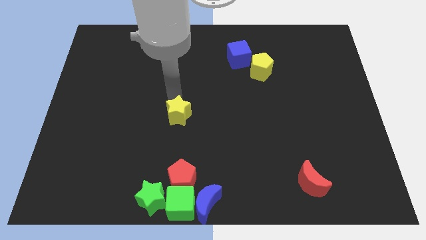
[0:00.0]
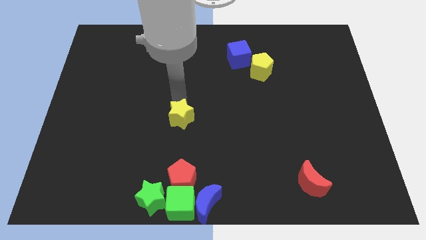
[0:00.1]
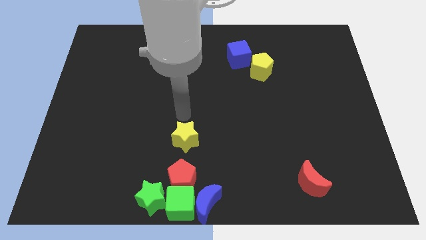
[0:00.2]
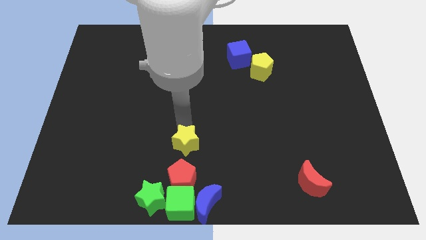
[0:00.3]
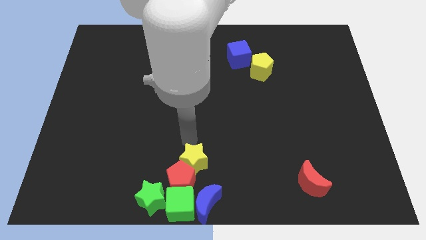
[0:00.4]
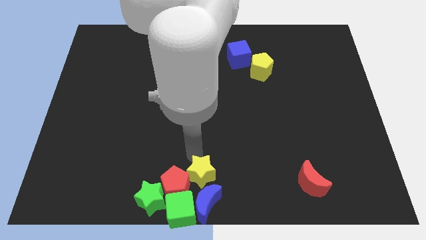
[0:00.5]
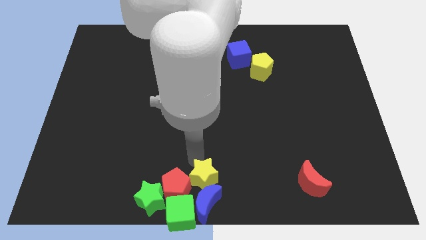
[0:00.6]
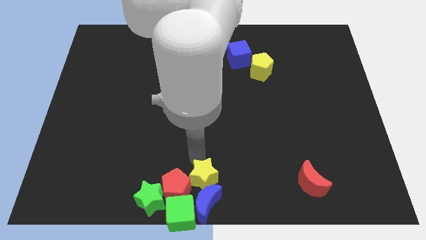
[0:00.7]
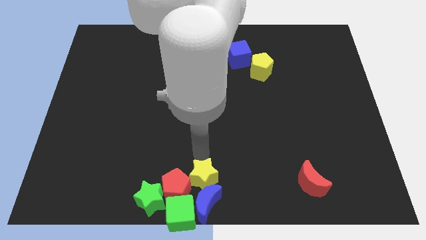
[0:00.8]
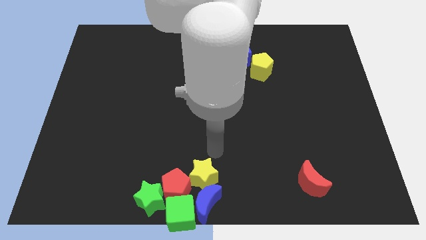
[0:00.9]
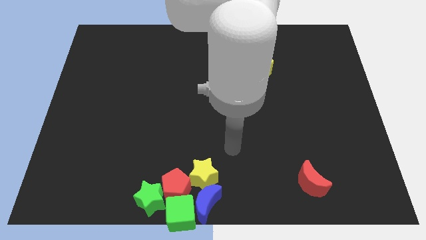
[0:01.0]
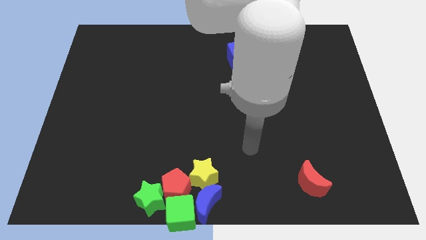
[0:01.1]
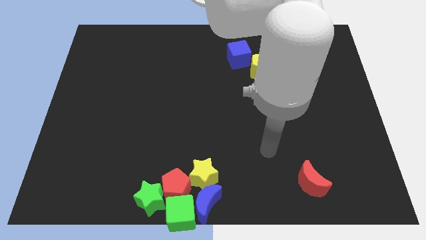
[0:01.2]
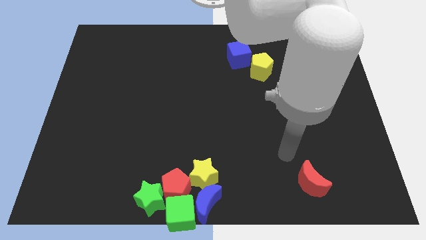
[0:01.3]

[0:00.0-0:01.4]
push yellow star to the top of blue crescent

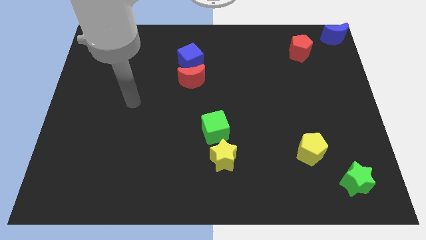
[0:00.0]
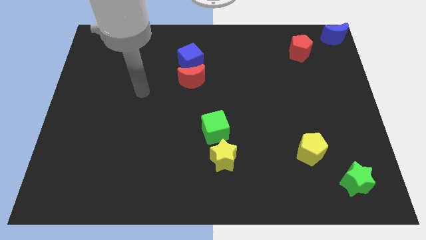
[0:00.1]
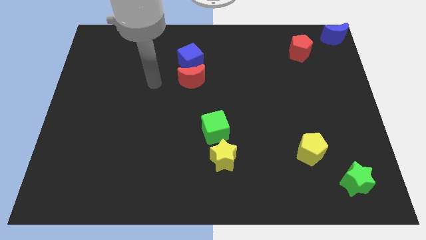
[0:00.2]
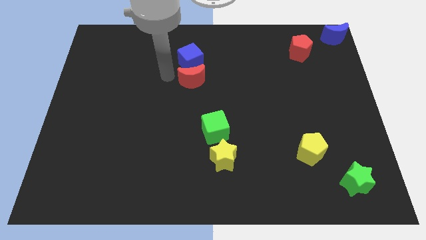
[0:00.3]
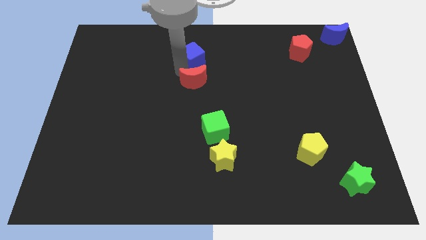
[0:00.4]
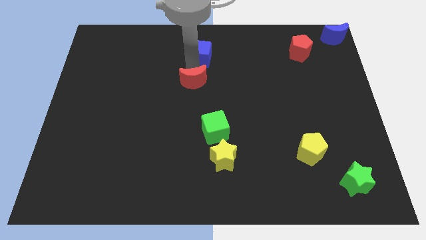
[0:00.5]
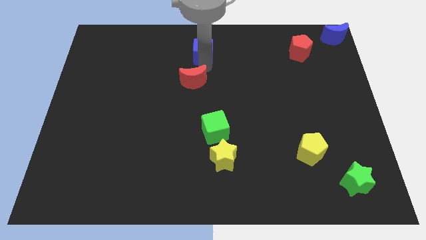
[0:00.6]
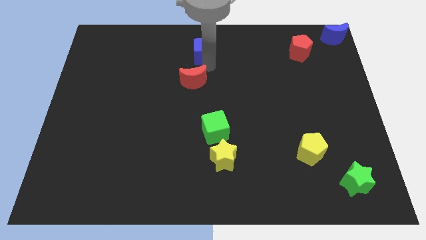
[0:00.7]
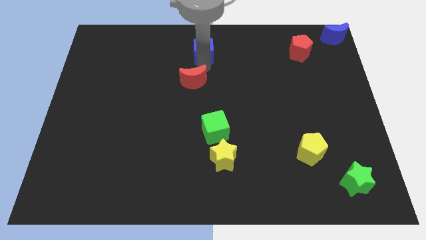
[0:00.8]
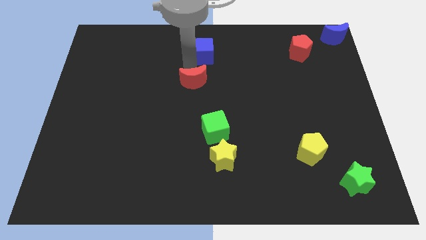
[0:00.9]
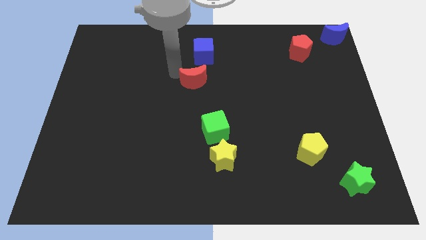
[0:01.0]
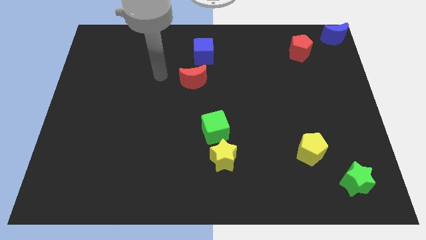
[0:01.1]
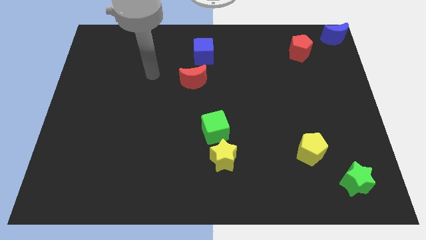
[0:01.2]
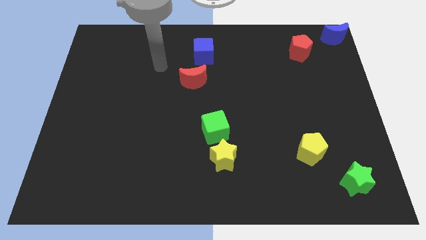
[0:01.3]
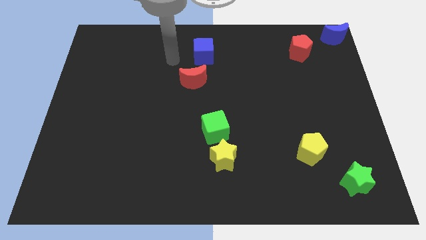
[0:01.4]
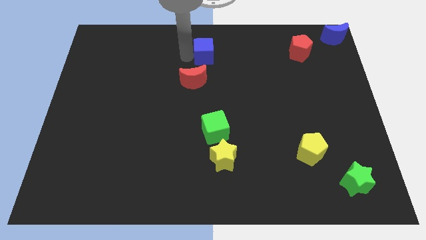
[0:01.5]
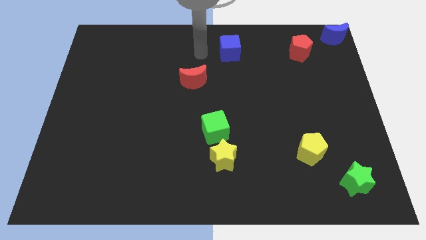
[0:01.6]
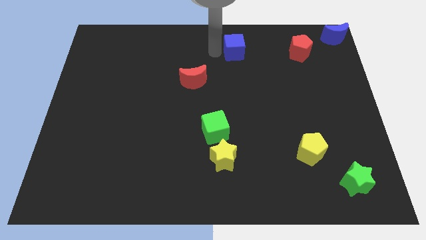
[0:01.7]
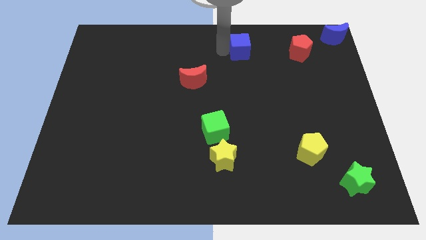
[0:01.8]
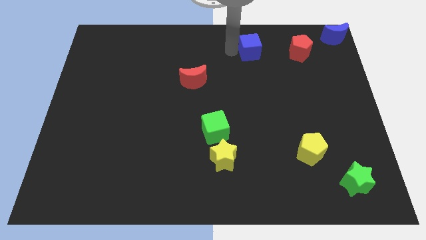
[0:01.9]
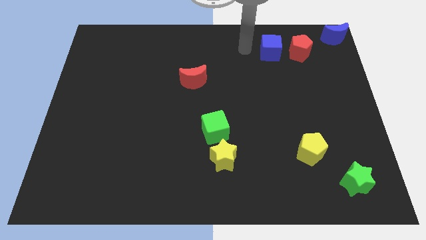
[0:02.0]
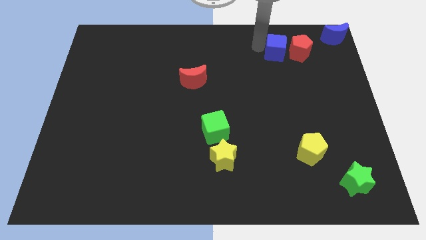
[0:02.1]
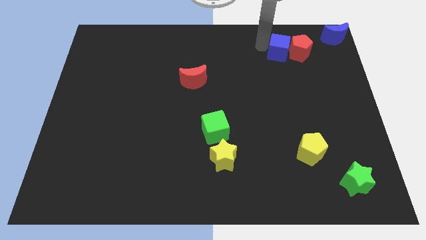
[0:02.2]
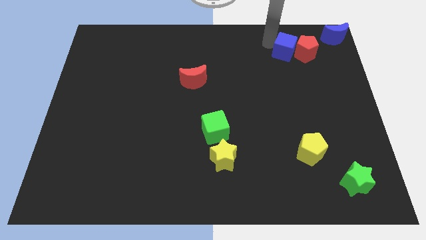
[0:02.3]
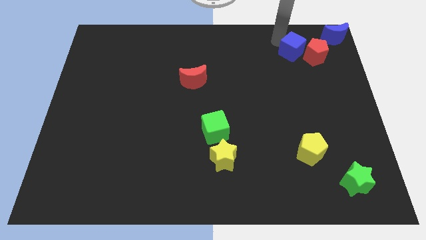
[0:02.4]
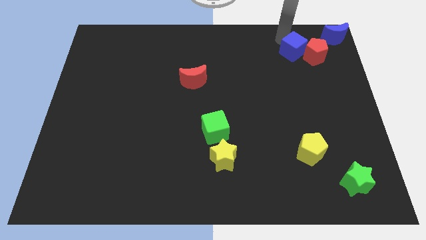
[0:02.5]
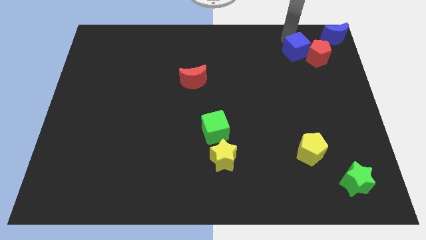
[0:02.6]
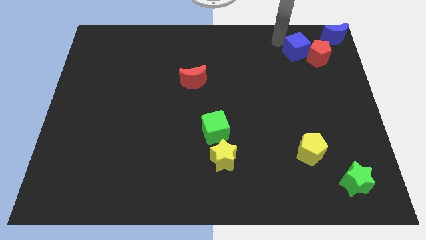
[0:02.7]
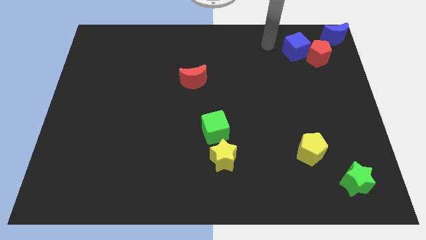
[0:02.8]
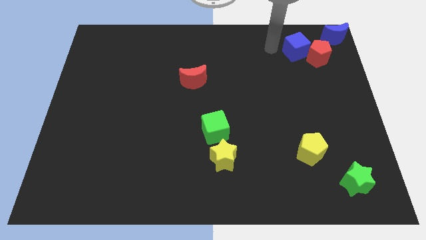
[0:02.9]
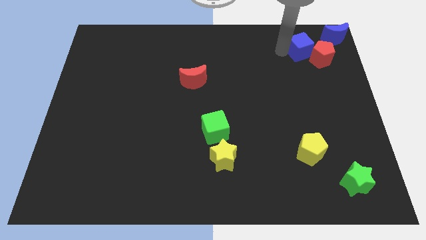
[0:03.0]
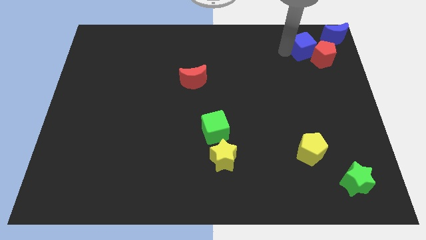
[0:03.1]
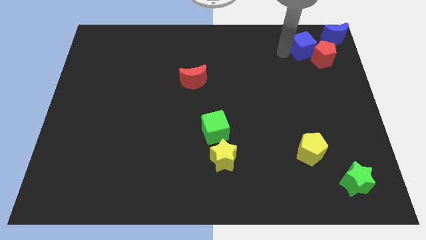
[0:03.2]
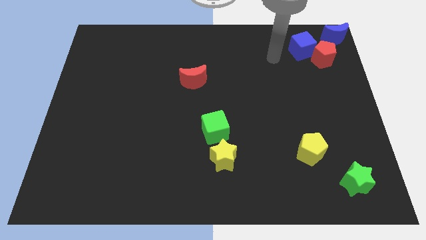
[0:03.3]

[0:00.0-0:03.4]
push the blue cube and red pentagon to the bottom left side of the blue crescent

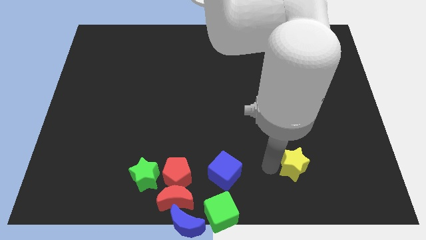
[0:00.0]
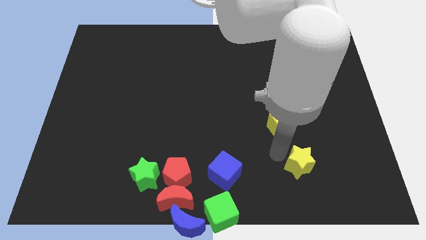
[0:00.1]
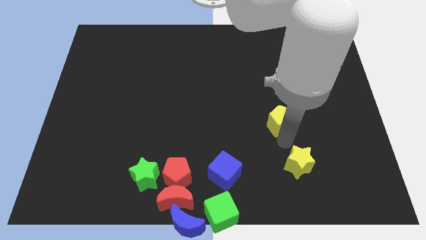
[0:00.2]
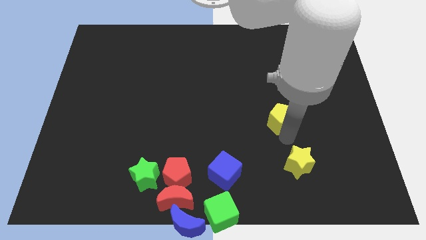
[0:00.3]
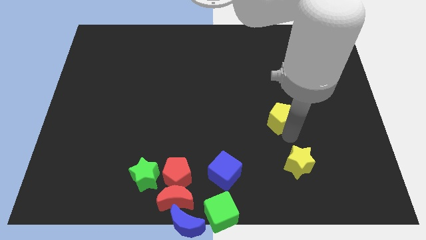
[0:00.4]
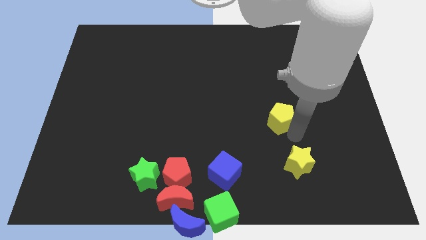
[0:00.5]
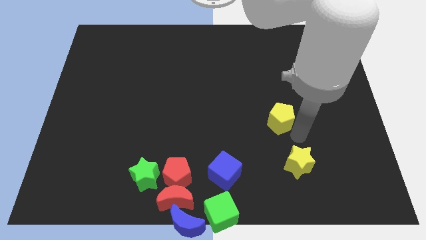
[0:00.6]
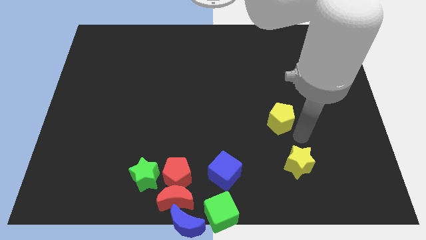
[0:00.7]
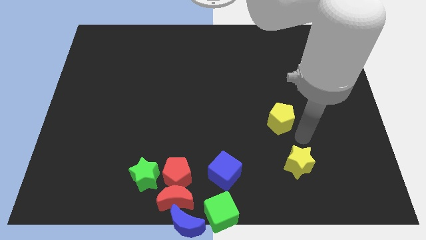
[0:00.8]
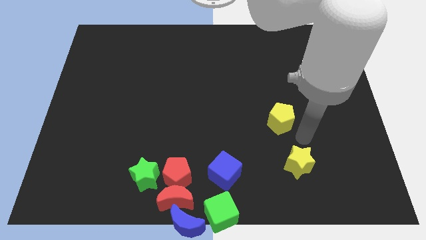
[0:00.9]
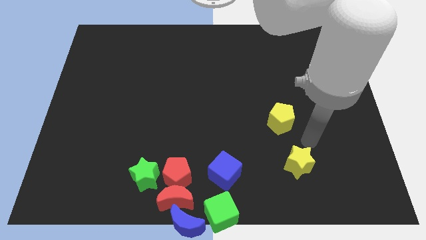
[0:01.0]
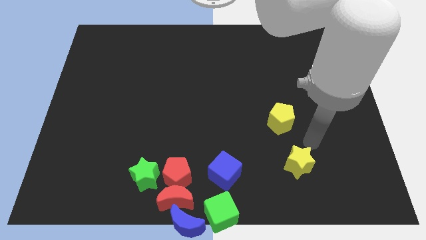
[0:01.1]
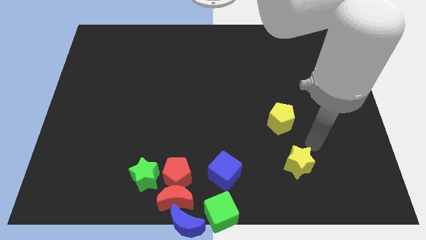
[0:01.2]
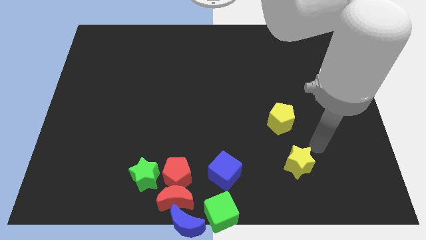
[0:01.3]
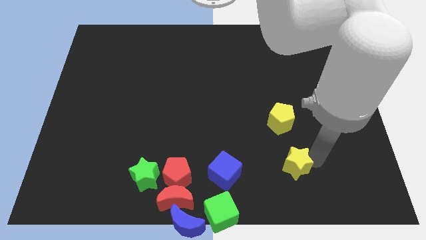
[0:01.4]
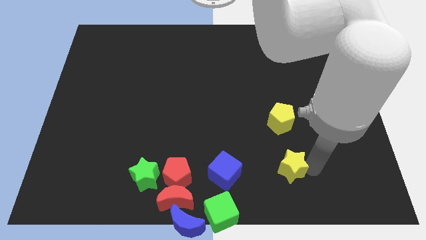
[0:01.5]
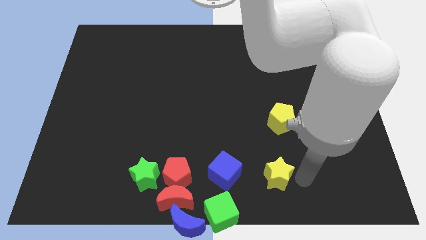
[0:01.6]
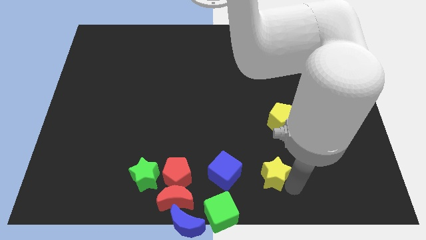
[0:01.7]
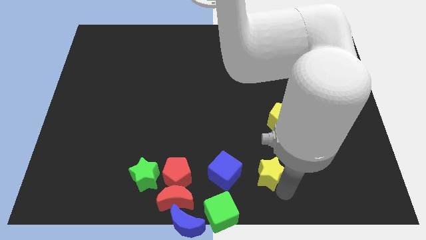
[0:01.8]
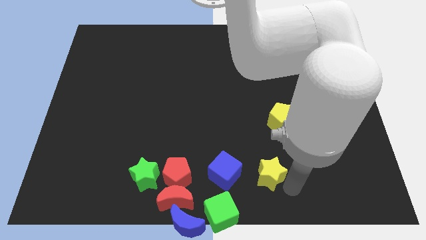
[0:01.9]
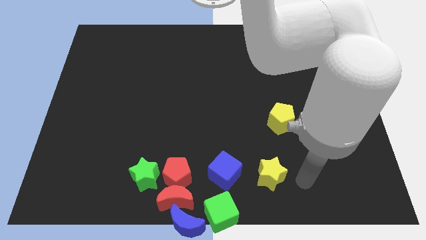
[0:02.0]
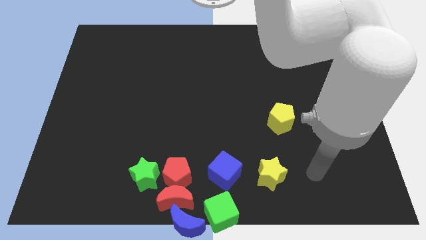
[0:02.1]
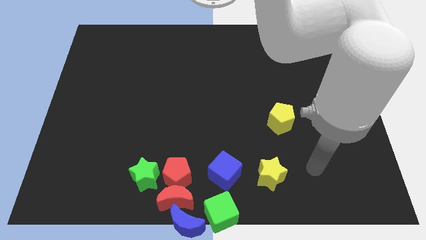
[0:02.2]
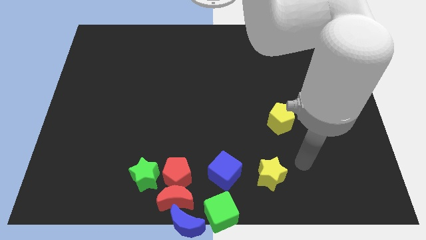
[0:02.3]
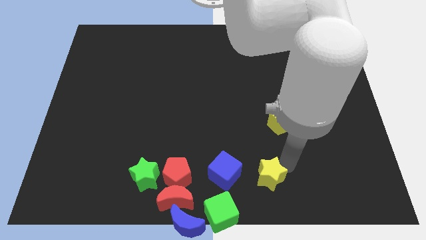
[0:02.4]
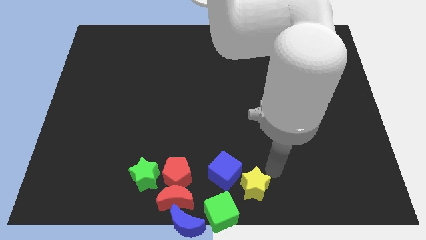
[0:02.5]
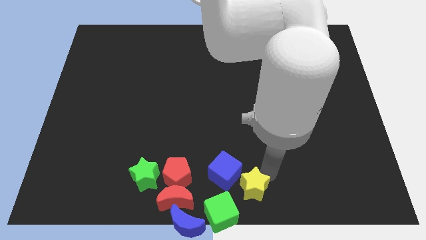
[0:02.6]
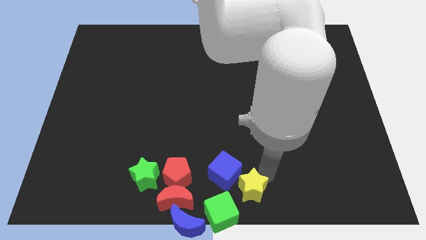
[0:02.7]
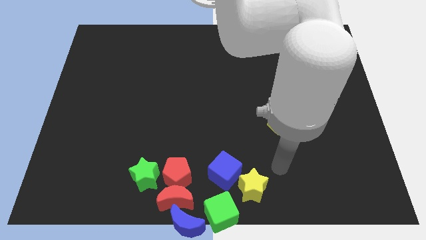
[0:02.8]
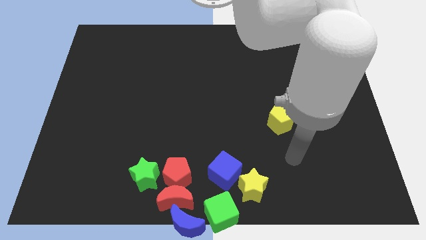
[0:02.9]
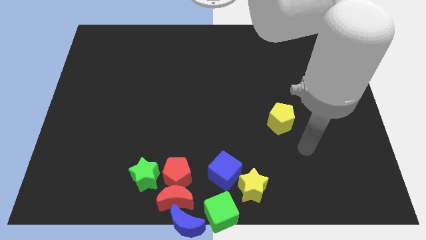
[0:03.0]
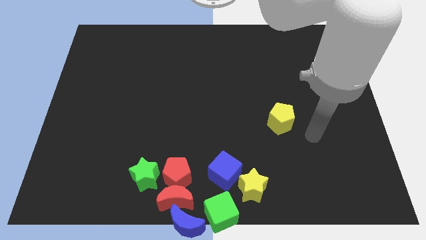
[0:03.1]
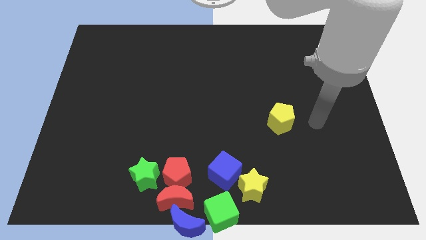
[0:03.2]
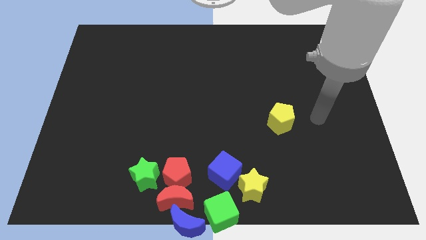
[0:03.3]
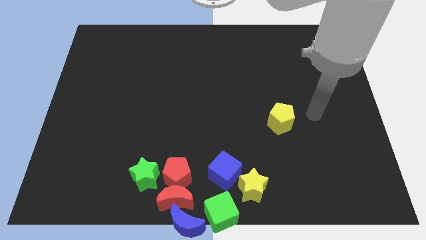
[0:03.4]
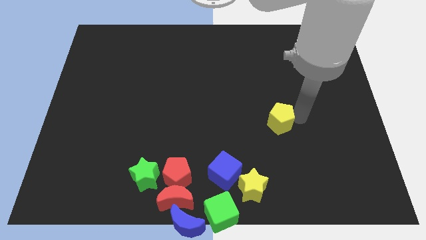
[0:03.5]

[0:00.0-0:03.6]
push the yellow star towards the blue cube

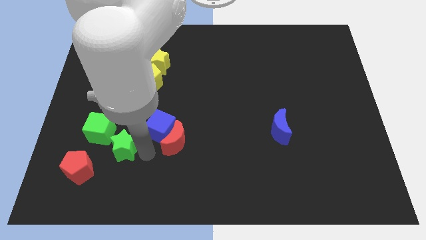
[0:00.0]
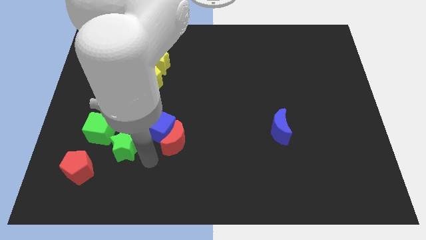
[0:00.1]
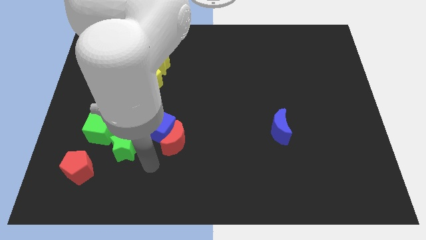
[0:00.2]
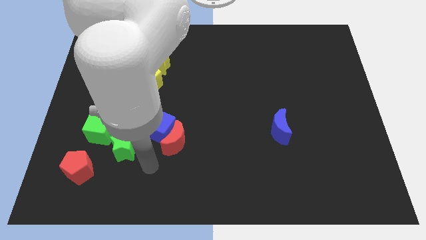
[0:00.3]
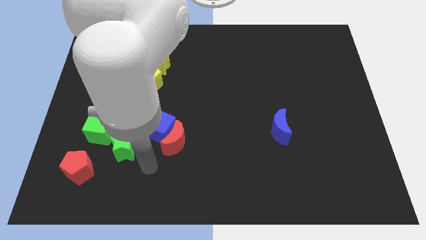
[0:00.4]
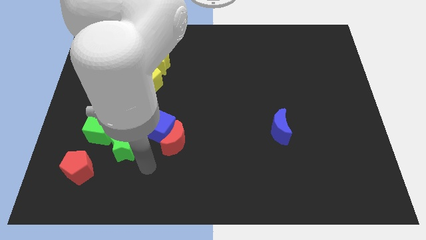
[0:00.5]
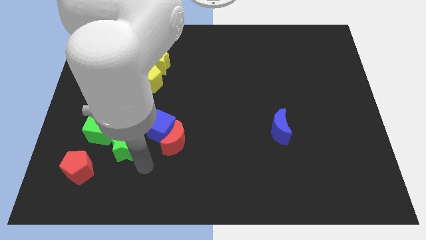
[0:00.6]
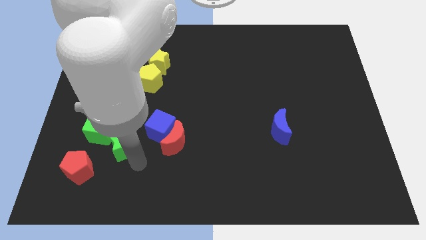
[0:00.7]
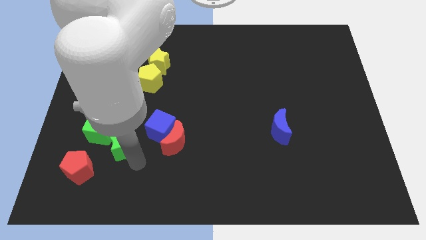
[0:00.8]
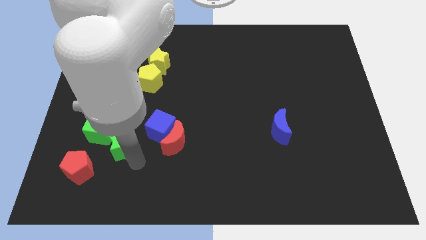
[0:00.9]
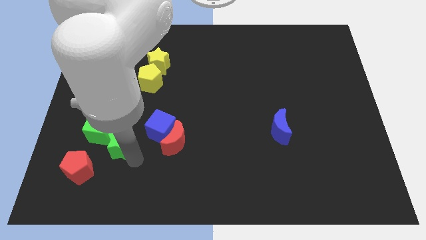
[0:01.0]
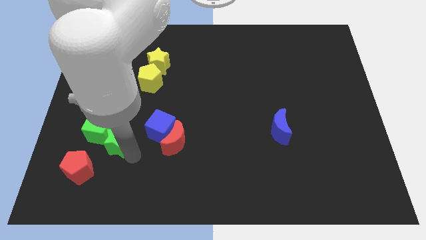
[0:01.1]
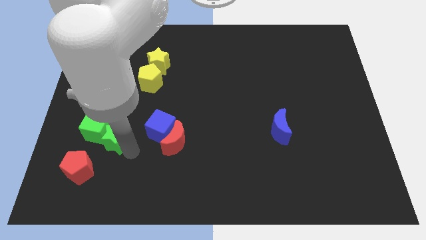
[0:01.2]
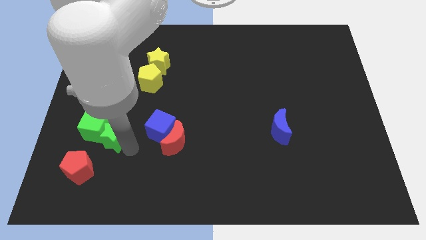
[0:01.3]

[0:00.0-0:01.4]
push the green star into the green cube
